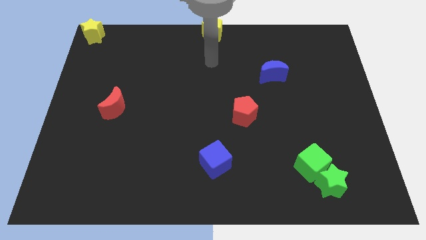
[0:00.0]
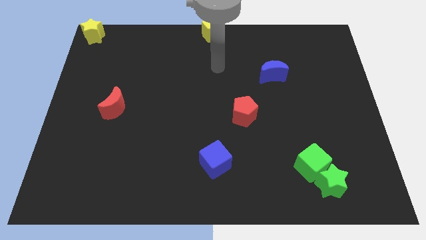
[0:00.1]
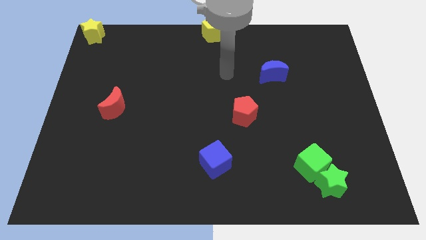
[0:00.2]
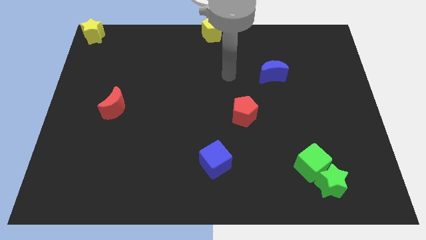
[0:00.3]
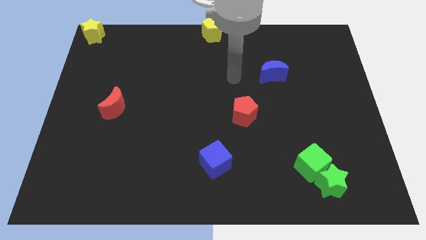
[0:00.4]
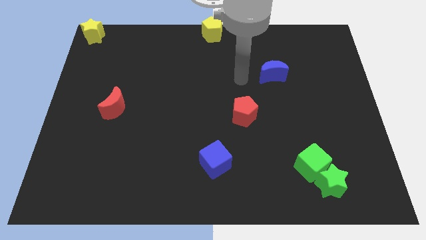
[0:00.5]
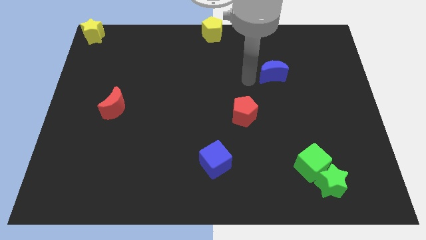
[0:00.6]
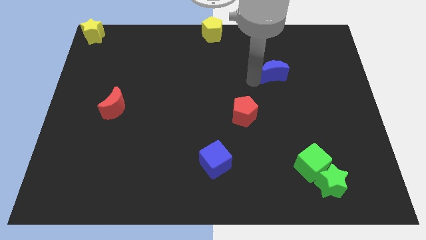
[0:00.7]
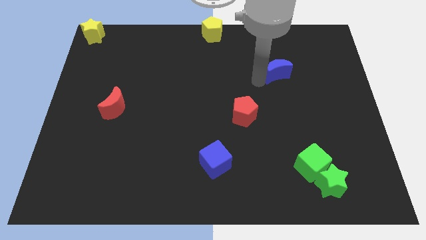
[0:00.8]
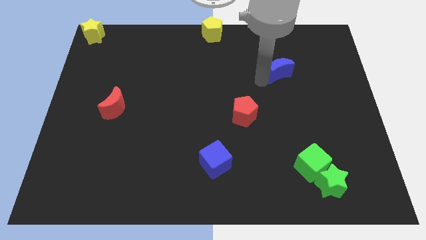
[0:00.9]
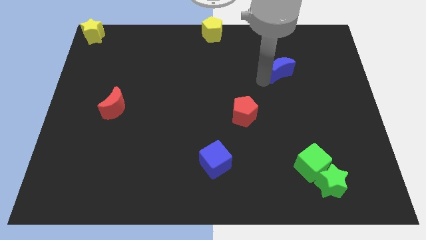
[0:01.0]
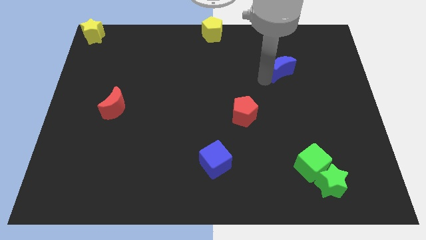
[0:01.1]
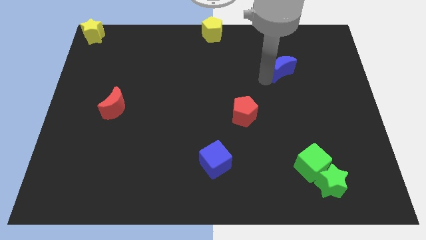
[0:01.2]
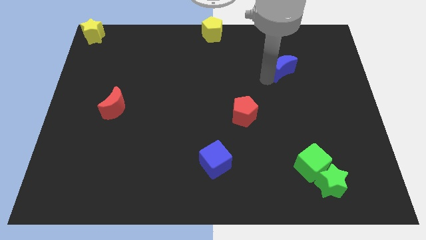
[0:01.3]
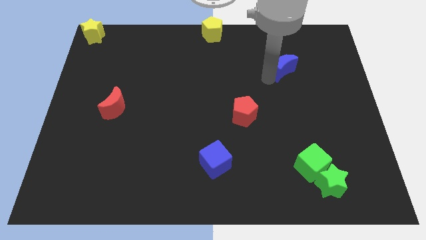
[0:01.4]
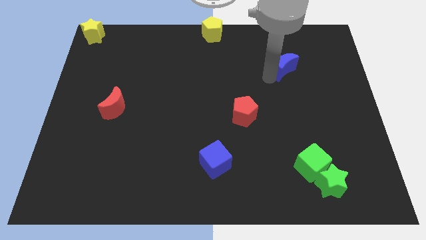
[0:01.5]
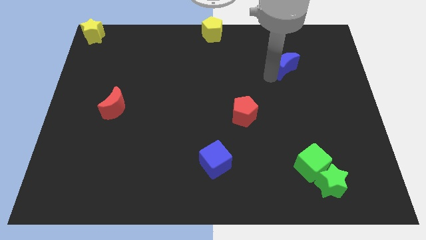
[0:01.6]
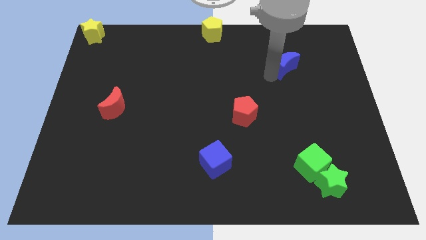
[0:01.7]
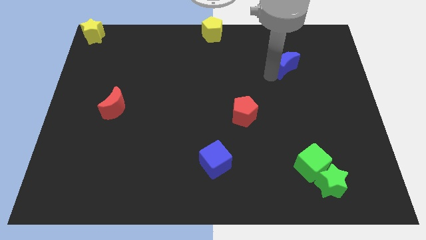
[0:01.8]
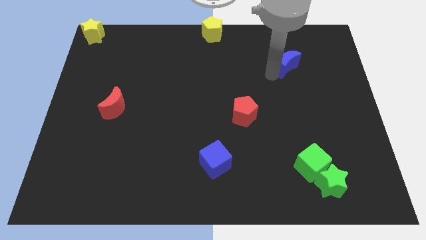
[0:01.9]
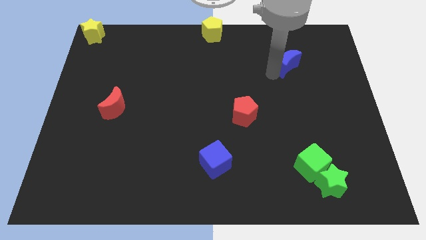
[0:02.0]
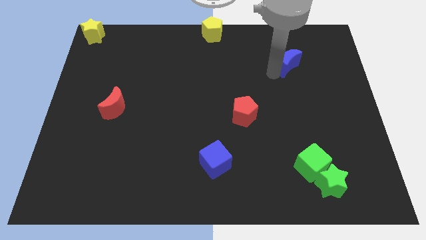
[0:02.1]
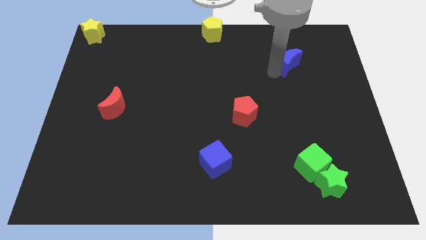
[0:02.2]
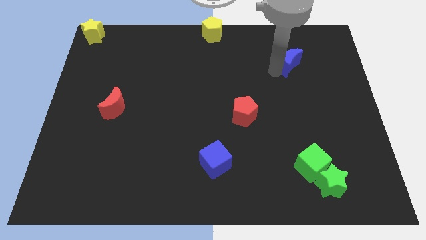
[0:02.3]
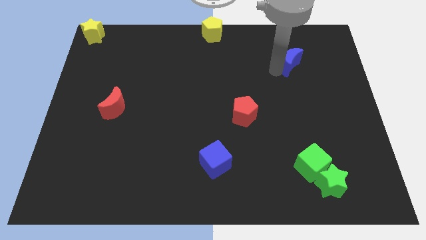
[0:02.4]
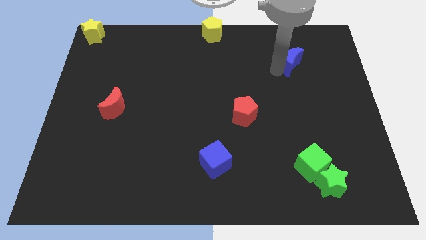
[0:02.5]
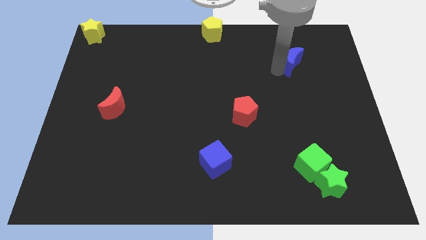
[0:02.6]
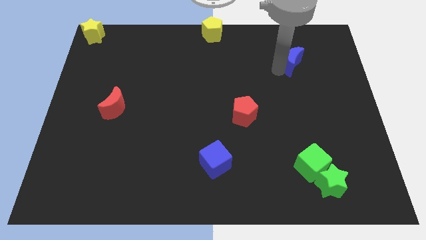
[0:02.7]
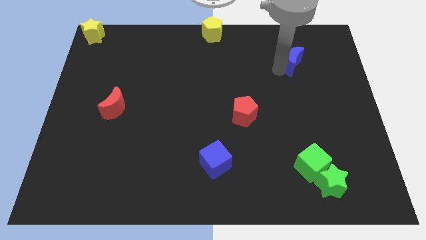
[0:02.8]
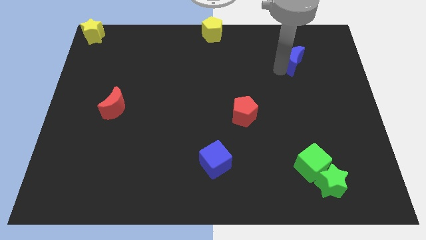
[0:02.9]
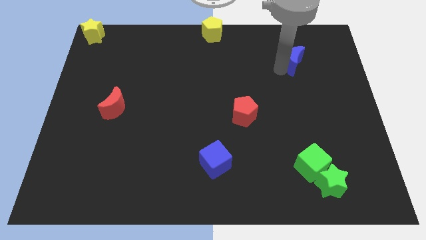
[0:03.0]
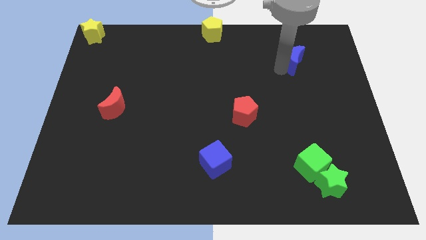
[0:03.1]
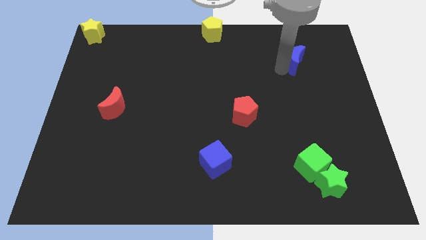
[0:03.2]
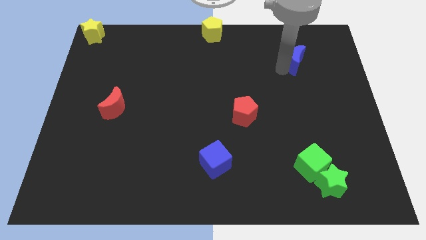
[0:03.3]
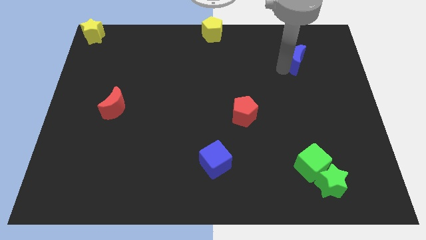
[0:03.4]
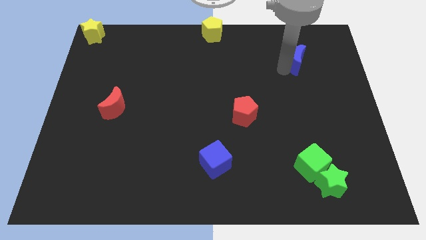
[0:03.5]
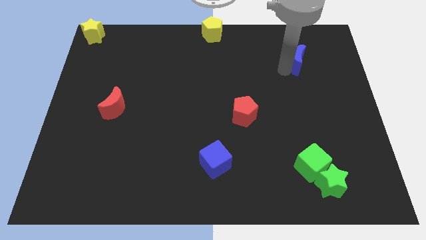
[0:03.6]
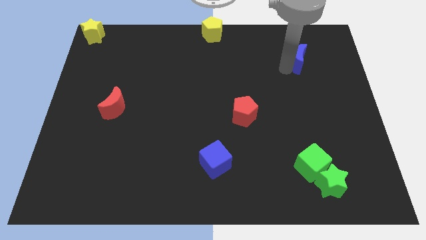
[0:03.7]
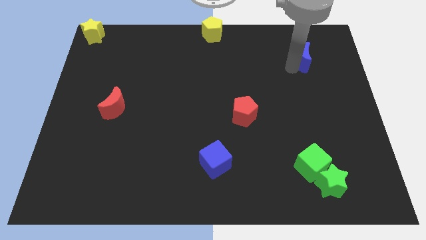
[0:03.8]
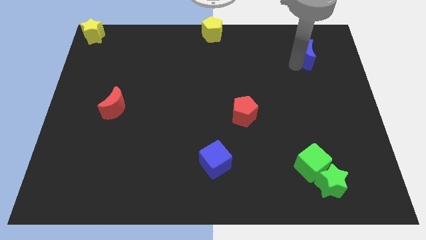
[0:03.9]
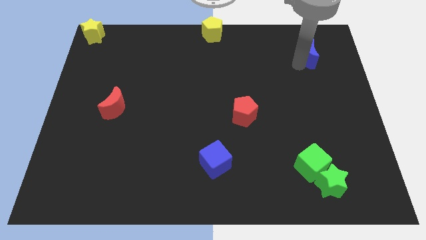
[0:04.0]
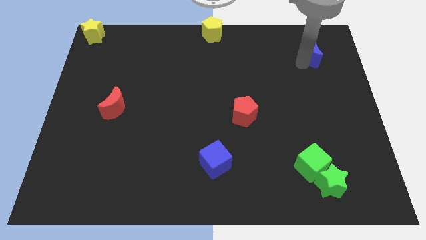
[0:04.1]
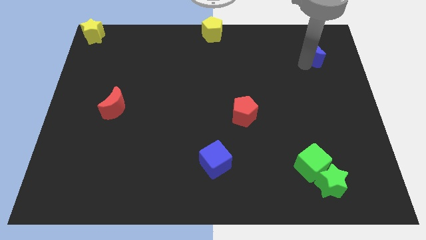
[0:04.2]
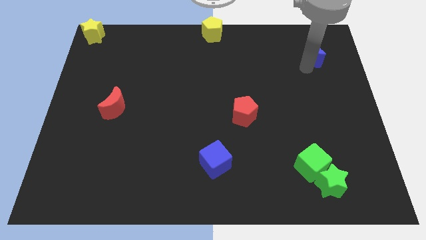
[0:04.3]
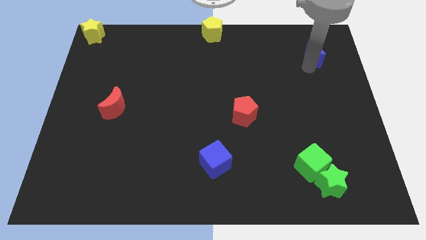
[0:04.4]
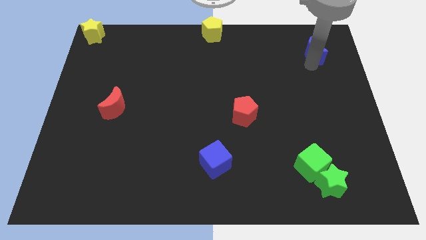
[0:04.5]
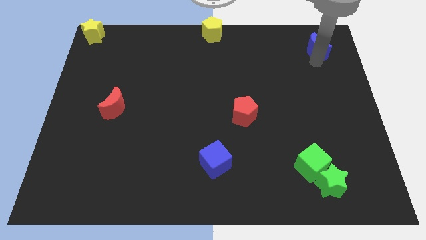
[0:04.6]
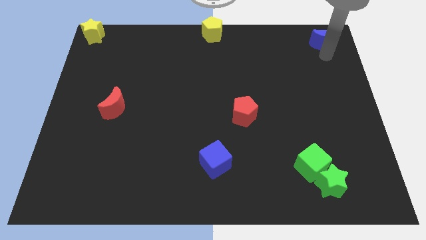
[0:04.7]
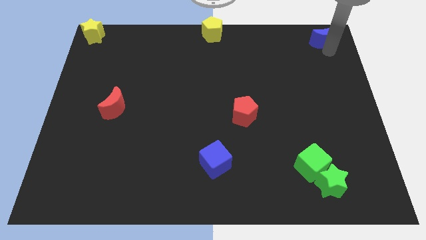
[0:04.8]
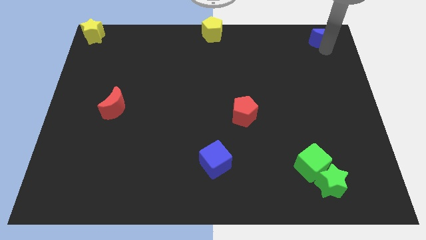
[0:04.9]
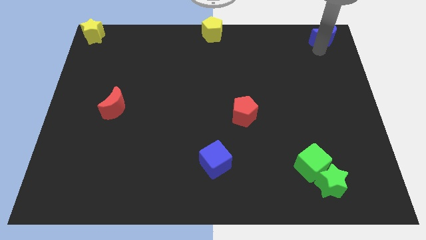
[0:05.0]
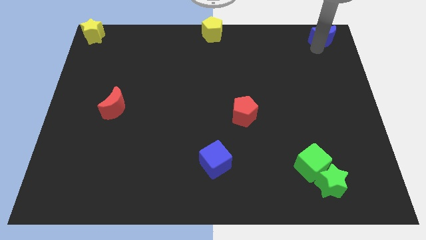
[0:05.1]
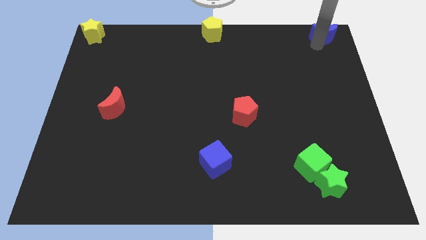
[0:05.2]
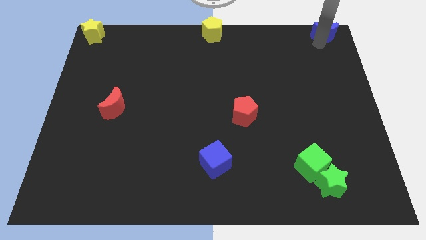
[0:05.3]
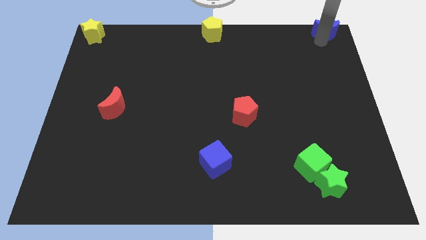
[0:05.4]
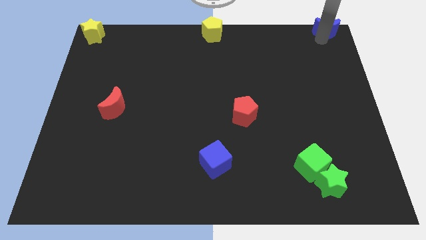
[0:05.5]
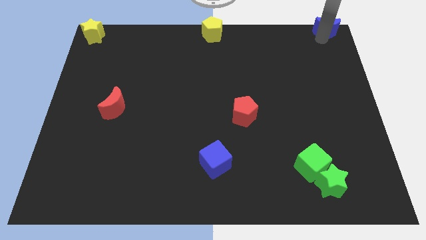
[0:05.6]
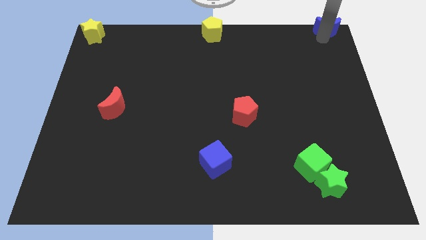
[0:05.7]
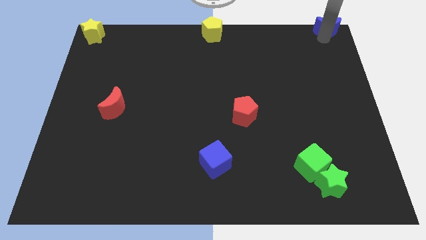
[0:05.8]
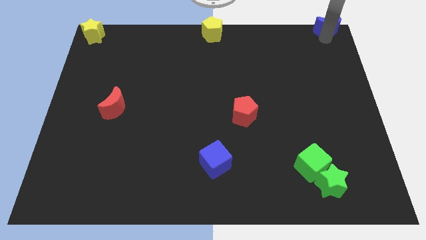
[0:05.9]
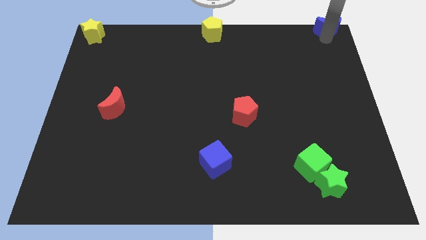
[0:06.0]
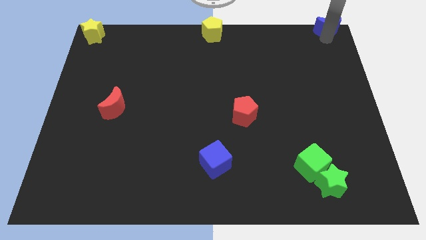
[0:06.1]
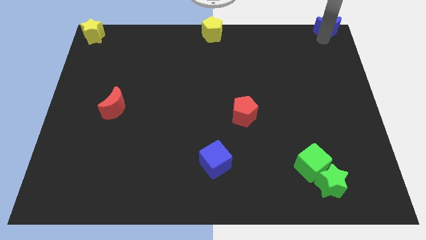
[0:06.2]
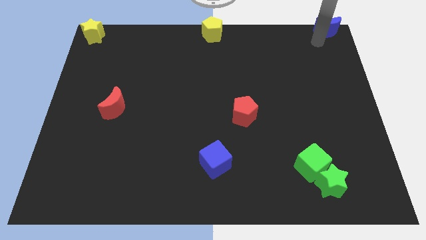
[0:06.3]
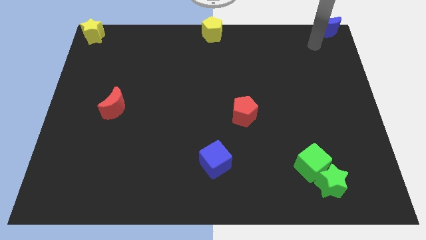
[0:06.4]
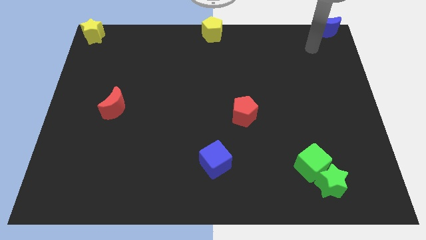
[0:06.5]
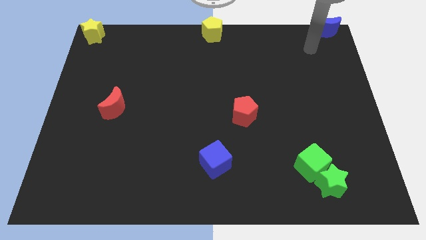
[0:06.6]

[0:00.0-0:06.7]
pusht the blue moon to the top right corner

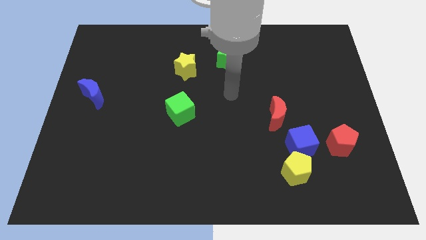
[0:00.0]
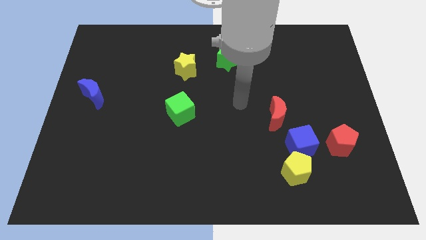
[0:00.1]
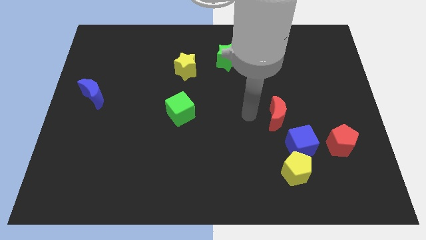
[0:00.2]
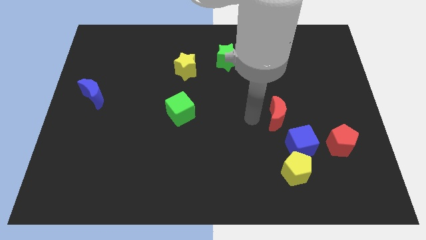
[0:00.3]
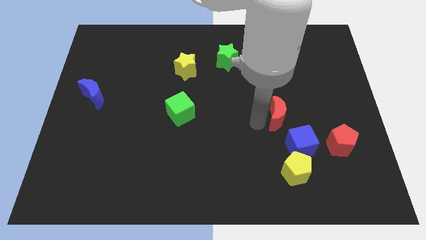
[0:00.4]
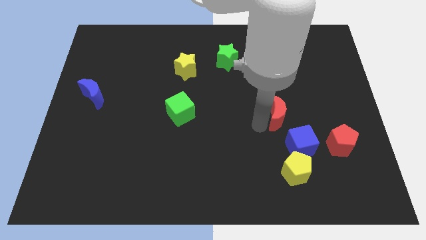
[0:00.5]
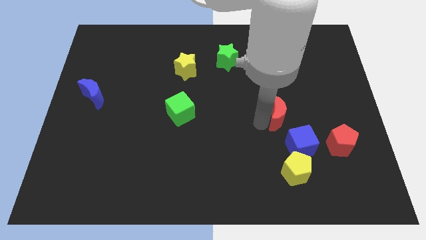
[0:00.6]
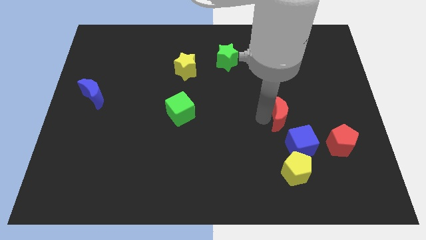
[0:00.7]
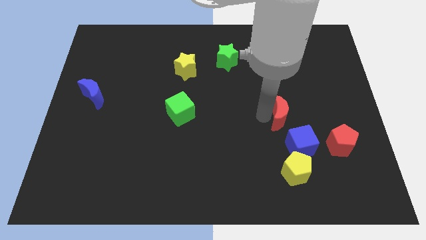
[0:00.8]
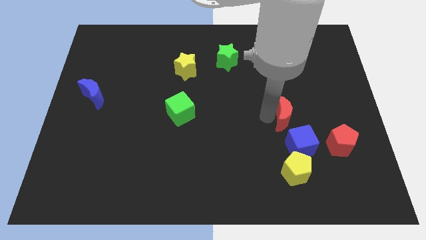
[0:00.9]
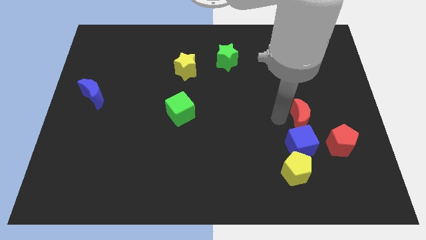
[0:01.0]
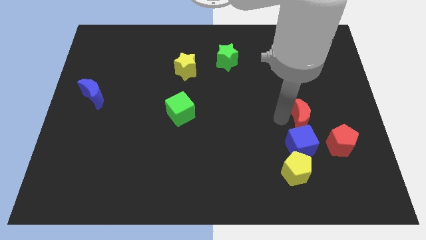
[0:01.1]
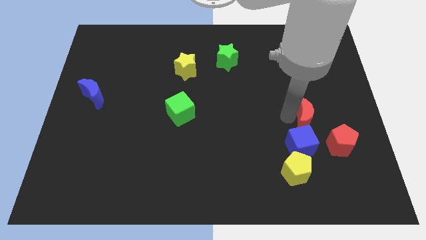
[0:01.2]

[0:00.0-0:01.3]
move the red crescent at the top side of the blue cube

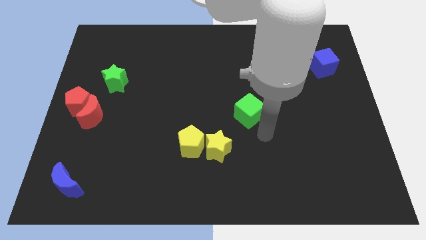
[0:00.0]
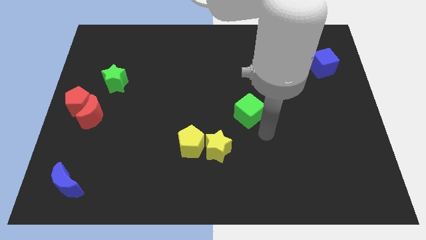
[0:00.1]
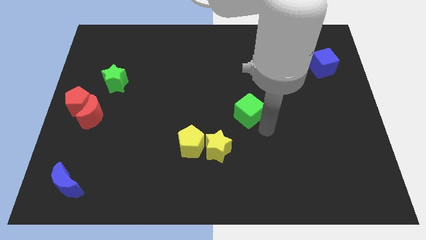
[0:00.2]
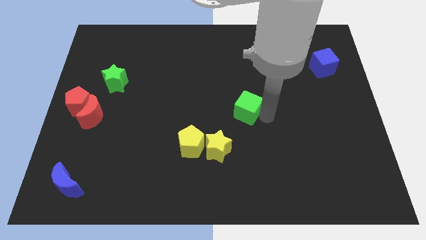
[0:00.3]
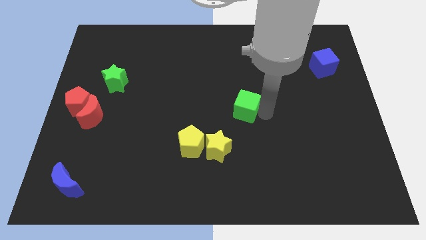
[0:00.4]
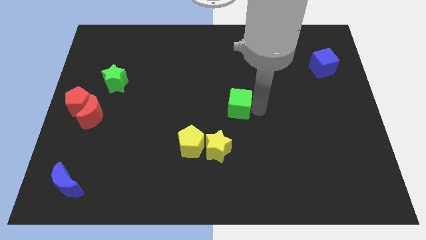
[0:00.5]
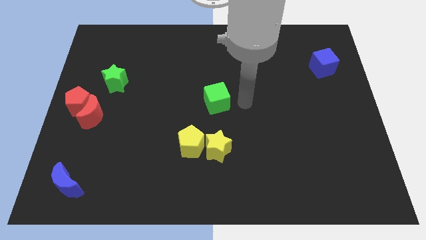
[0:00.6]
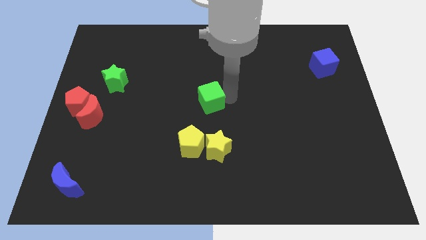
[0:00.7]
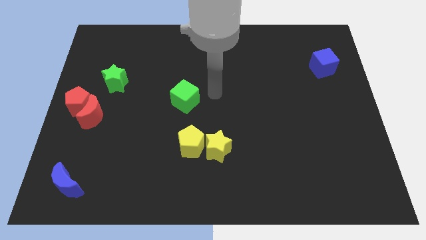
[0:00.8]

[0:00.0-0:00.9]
place green cube above yellow pentagon

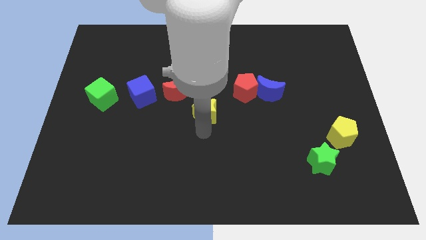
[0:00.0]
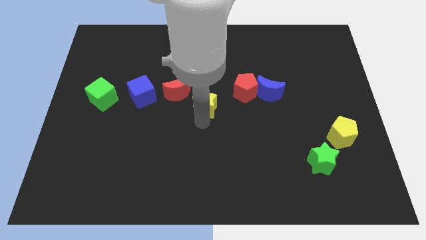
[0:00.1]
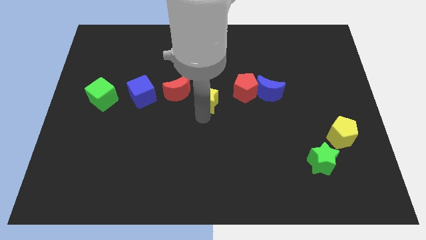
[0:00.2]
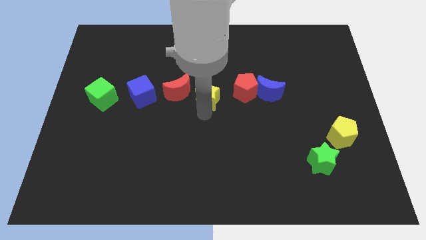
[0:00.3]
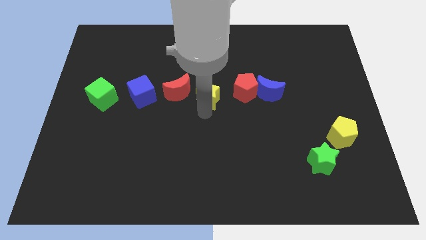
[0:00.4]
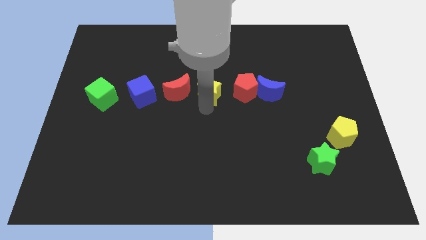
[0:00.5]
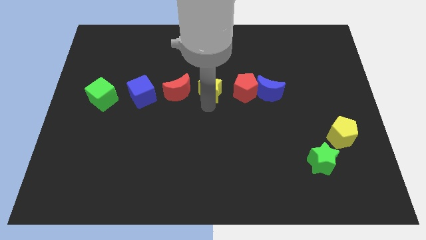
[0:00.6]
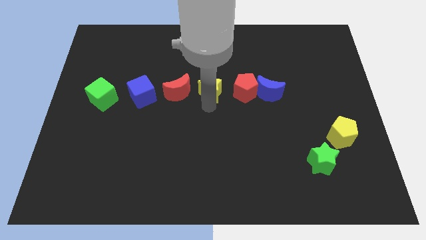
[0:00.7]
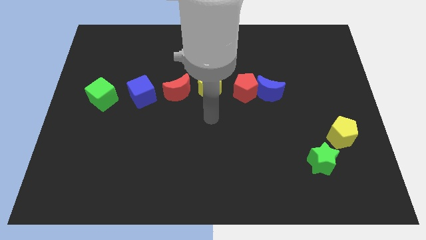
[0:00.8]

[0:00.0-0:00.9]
place the yellow star left to the red pentagon
